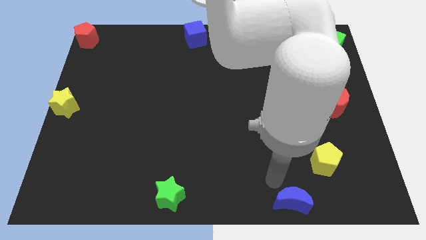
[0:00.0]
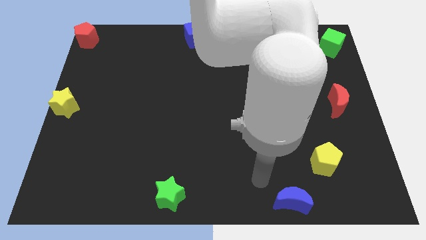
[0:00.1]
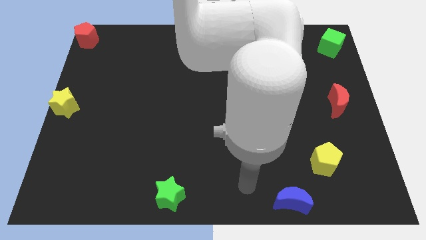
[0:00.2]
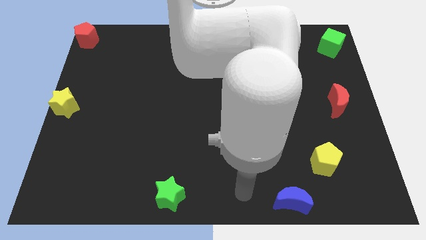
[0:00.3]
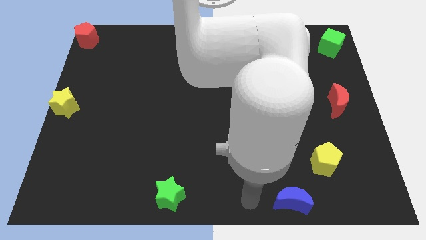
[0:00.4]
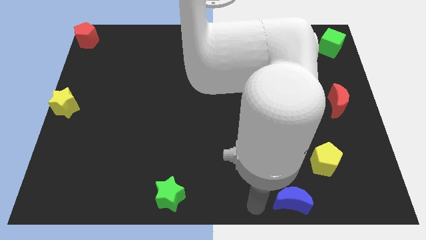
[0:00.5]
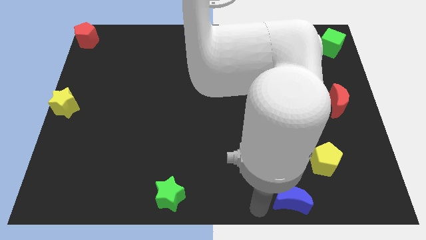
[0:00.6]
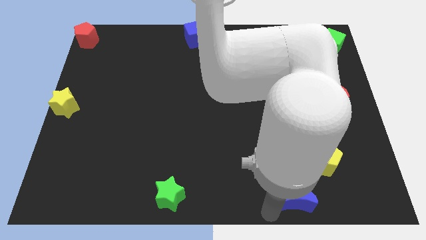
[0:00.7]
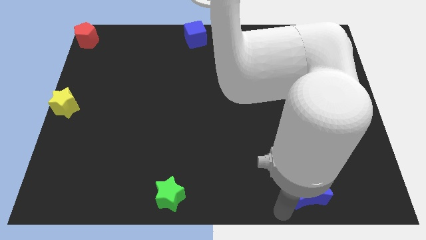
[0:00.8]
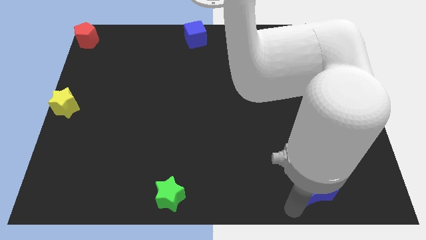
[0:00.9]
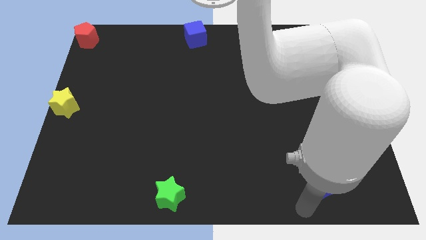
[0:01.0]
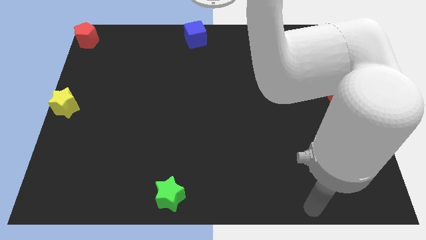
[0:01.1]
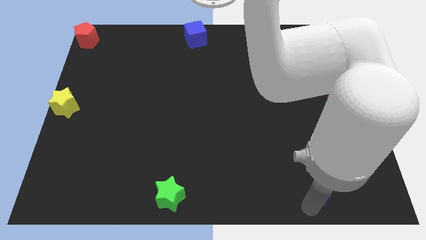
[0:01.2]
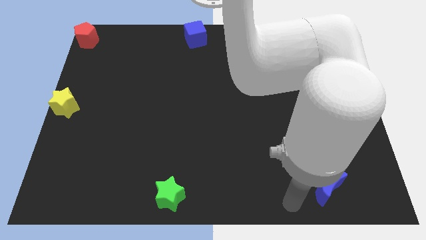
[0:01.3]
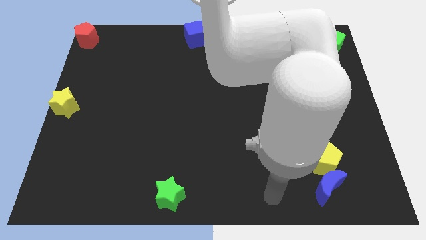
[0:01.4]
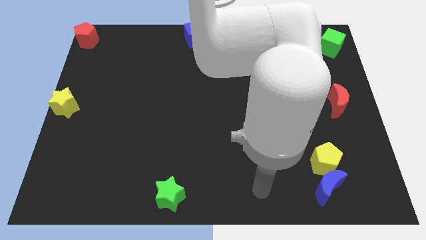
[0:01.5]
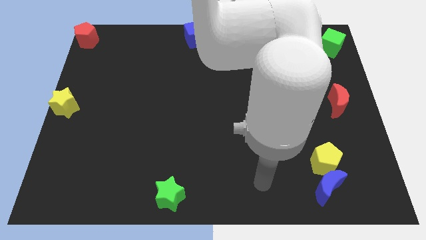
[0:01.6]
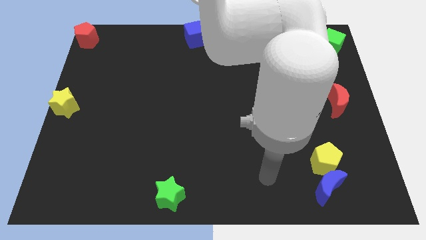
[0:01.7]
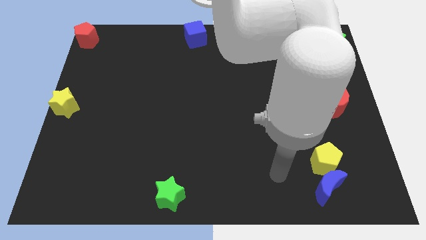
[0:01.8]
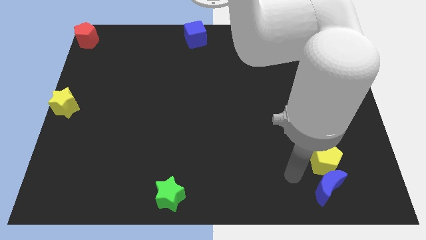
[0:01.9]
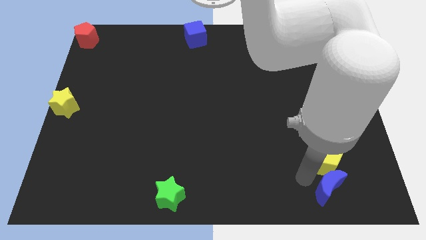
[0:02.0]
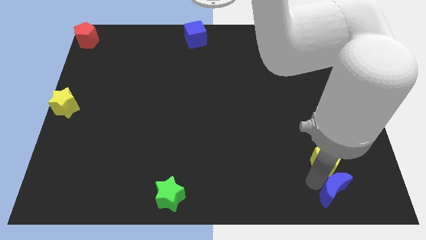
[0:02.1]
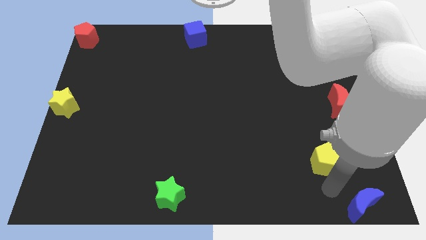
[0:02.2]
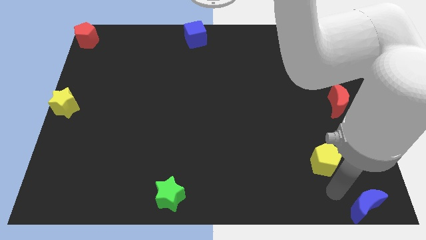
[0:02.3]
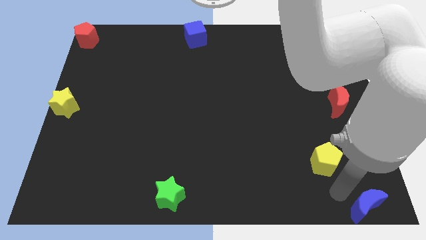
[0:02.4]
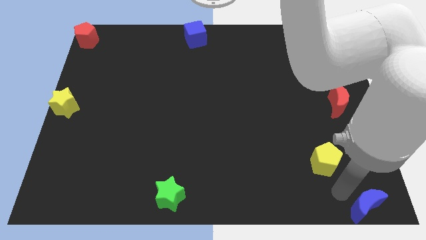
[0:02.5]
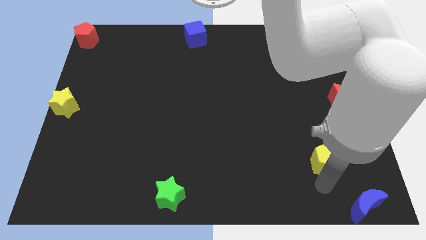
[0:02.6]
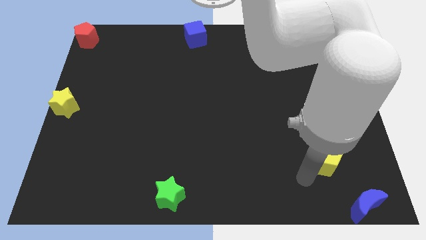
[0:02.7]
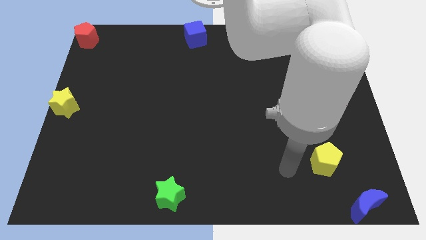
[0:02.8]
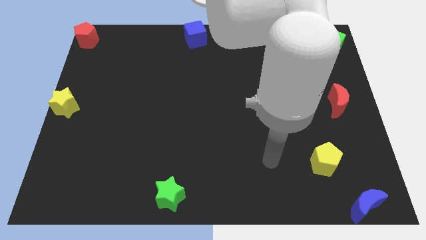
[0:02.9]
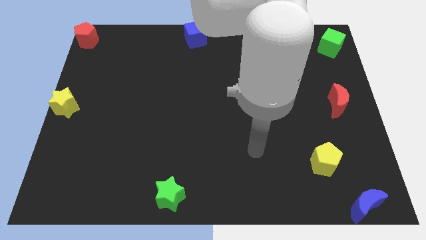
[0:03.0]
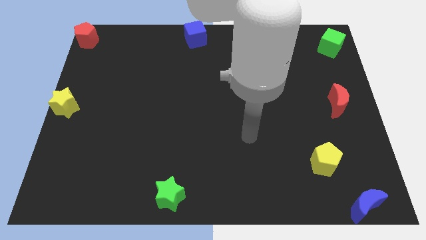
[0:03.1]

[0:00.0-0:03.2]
move blue crescent towards the bottom right corner of the board

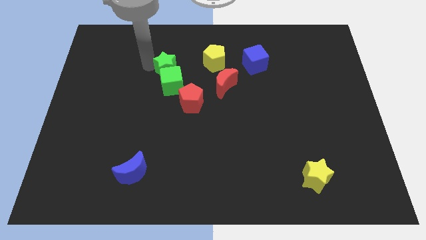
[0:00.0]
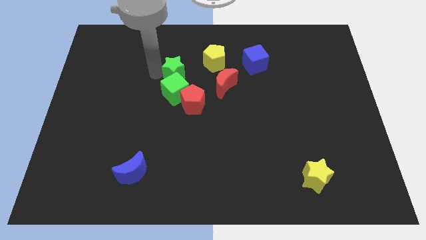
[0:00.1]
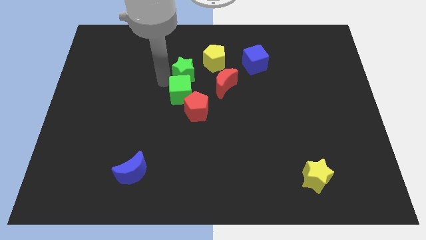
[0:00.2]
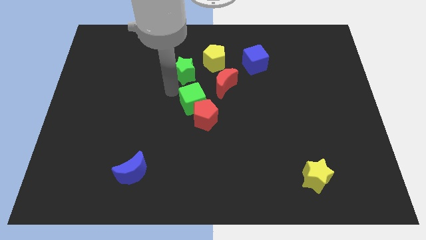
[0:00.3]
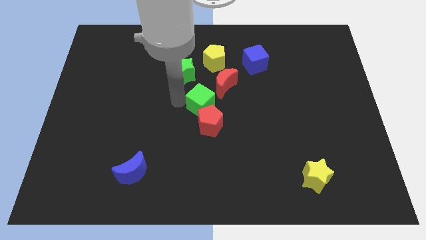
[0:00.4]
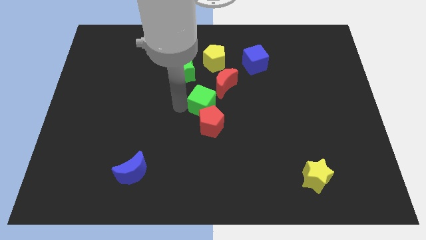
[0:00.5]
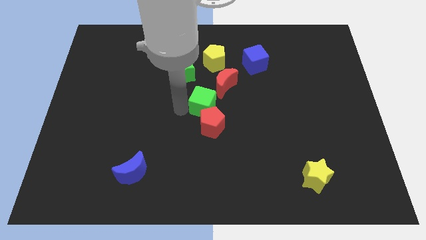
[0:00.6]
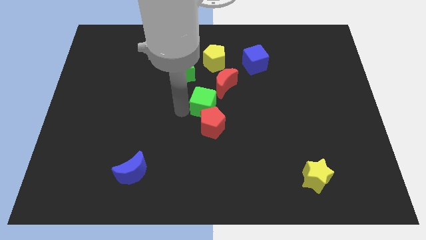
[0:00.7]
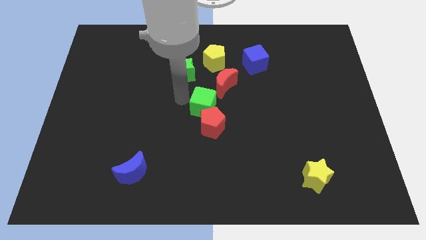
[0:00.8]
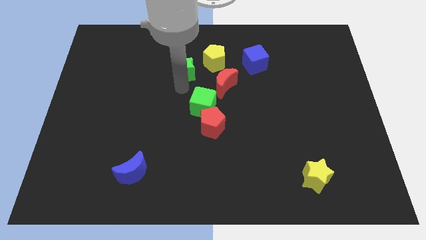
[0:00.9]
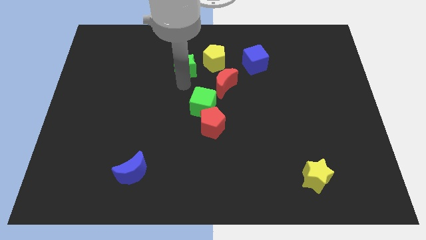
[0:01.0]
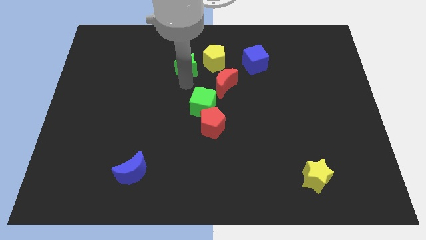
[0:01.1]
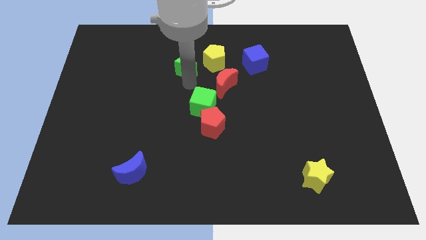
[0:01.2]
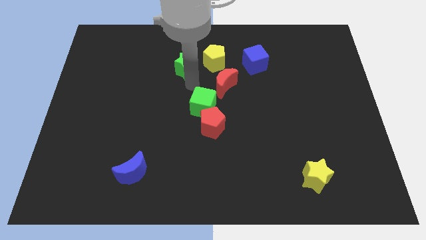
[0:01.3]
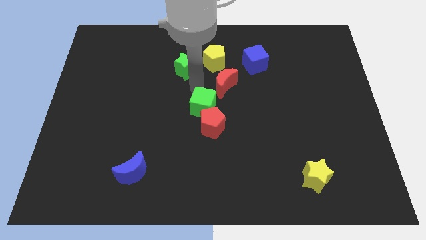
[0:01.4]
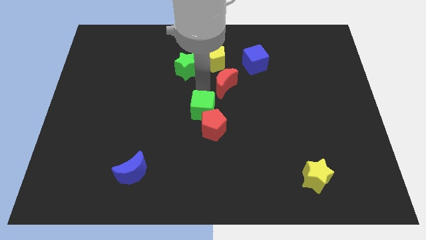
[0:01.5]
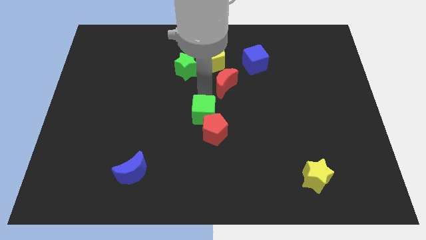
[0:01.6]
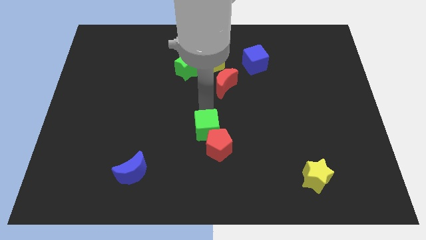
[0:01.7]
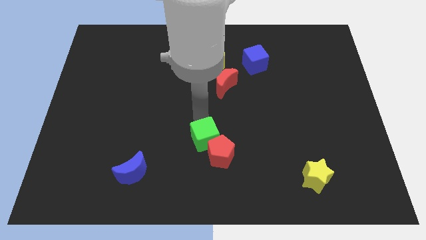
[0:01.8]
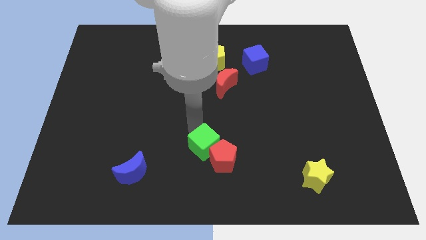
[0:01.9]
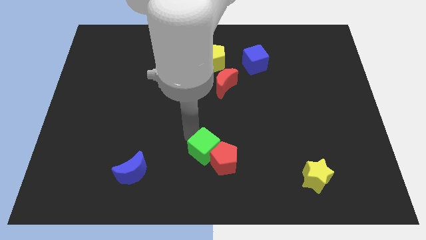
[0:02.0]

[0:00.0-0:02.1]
push green cube into red pentagon

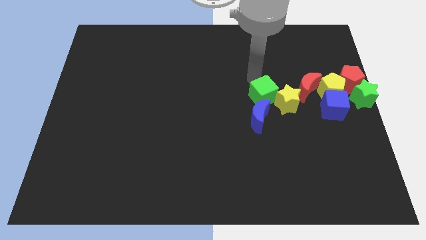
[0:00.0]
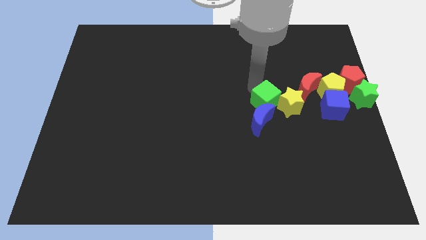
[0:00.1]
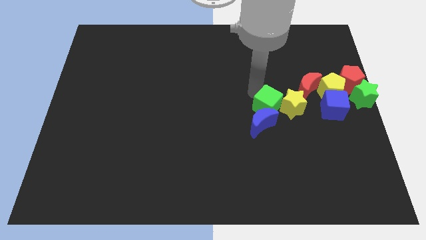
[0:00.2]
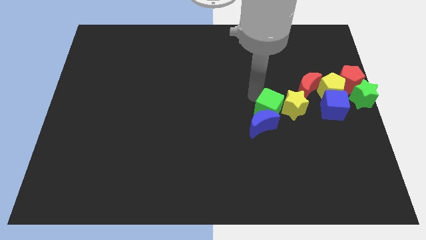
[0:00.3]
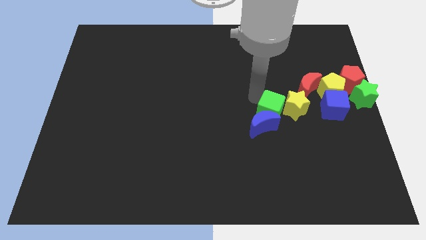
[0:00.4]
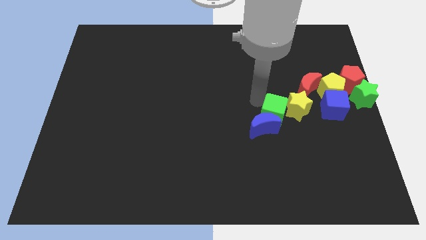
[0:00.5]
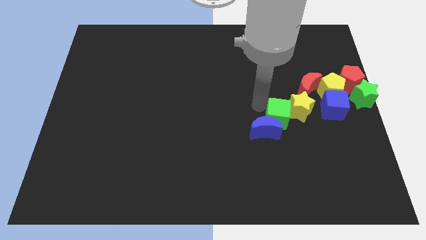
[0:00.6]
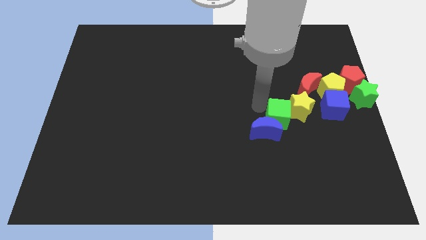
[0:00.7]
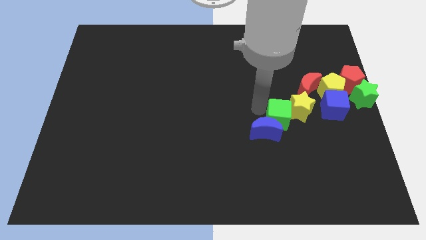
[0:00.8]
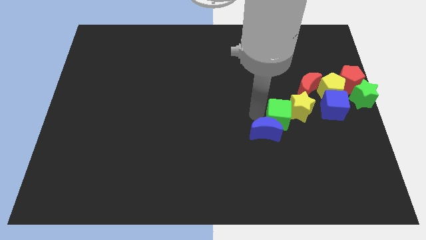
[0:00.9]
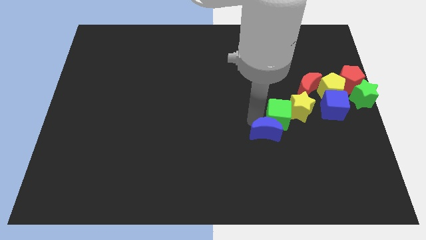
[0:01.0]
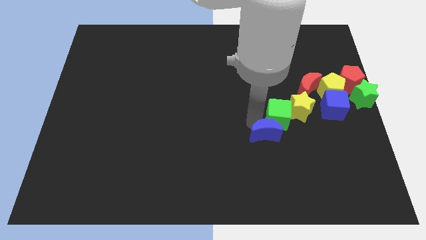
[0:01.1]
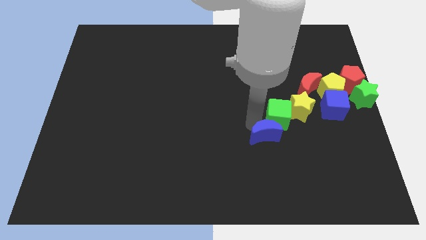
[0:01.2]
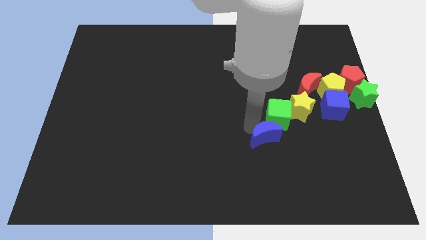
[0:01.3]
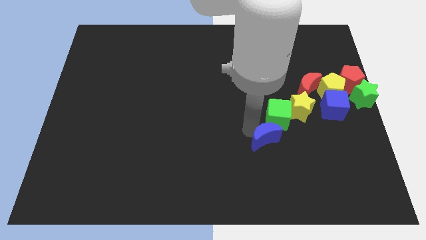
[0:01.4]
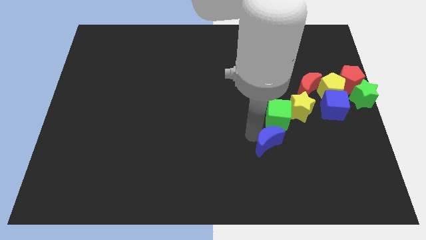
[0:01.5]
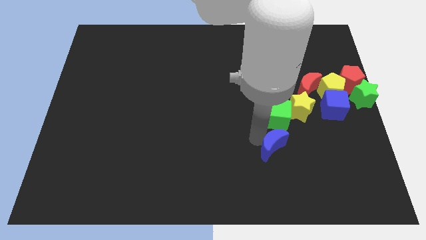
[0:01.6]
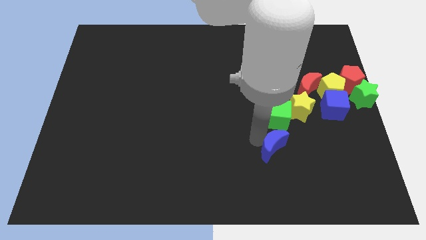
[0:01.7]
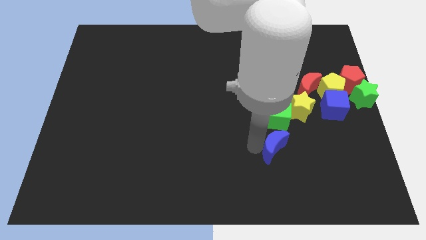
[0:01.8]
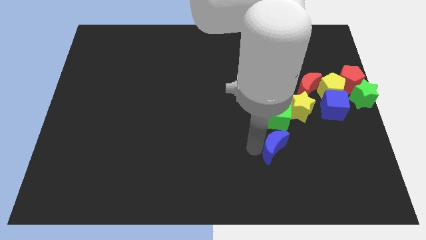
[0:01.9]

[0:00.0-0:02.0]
separate the blue moon from the green cube

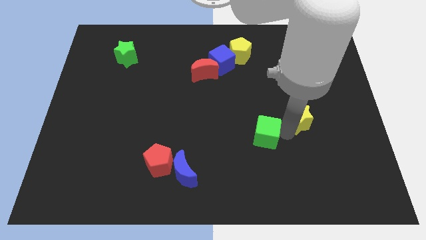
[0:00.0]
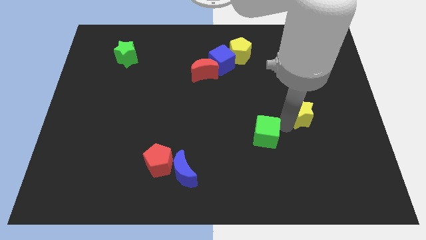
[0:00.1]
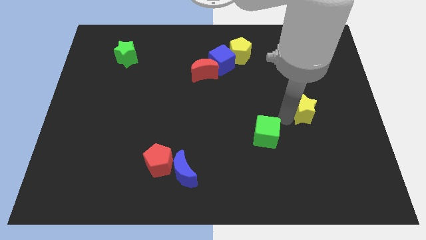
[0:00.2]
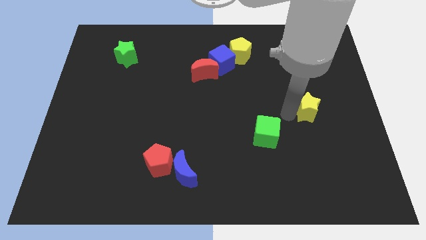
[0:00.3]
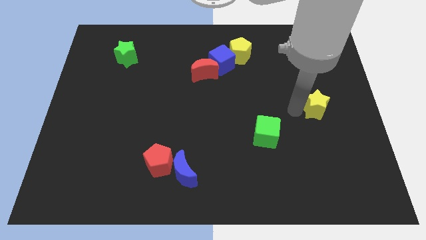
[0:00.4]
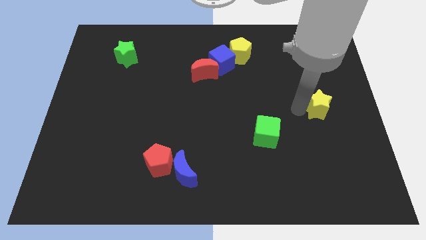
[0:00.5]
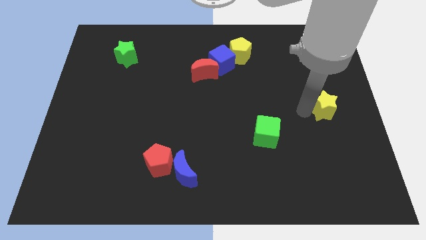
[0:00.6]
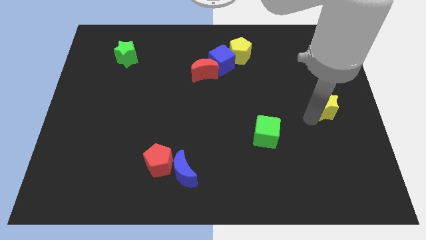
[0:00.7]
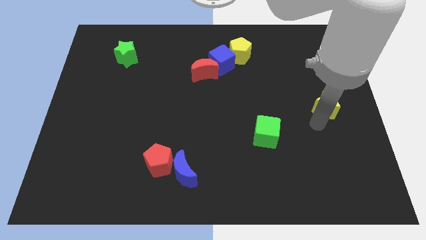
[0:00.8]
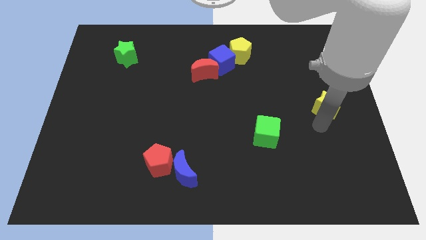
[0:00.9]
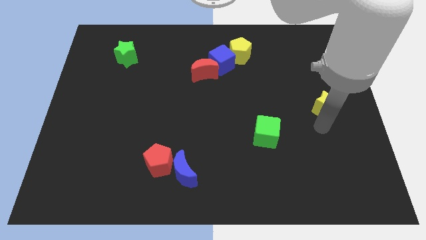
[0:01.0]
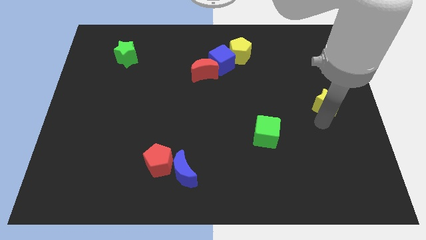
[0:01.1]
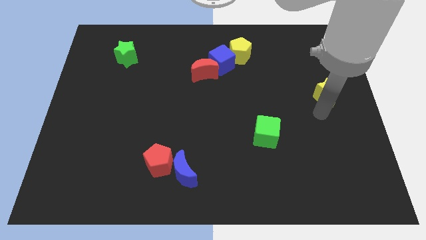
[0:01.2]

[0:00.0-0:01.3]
move the yellow star to the left side

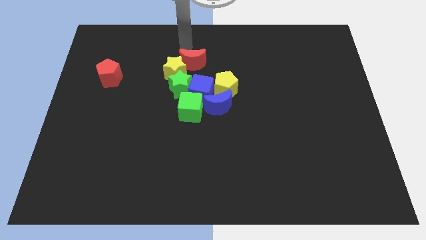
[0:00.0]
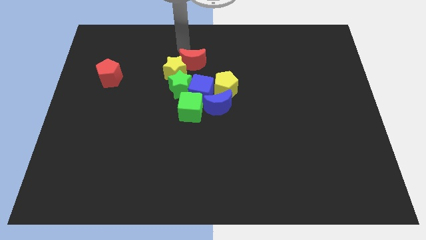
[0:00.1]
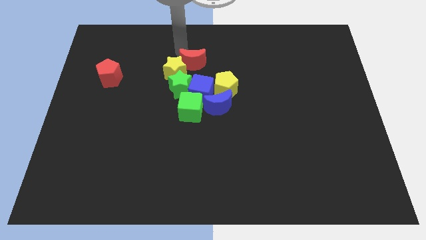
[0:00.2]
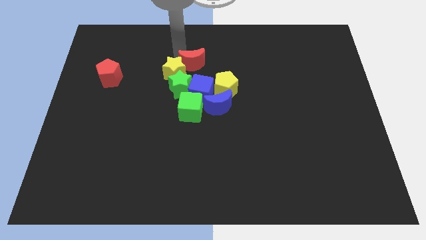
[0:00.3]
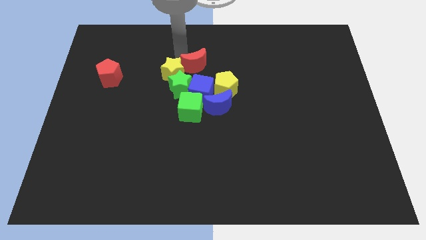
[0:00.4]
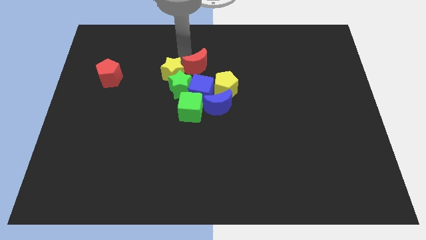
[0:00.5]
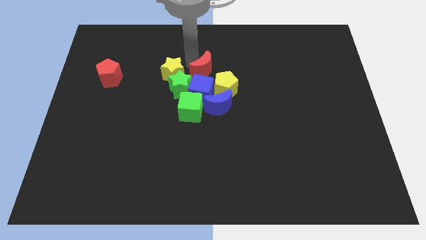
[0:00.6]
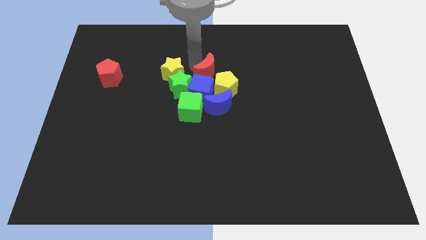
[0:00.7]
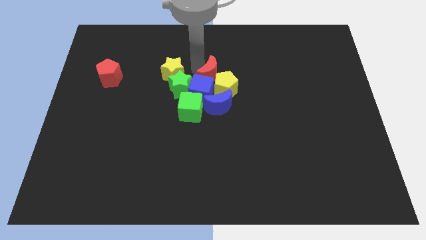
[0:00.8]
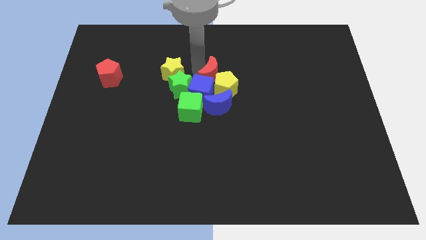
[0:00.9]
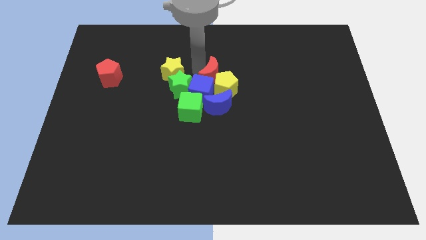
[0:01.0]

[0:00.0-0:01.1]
drag the red moon to the top of the blue cube
